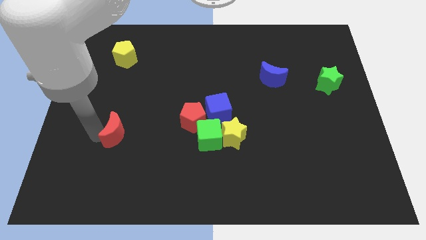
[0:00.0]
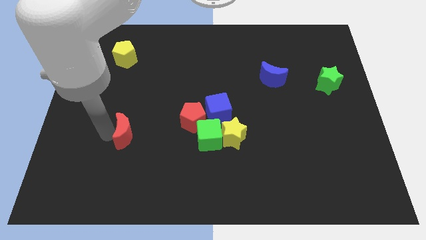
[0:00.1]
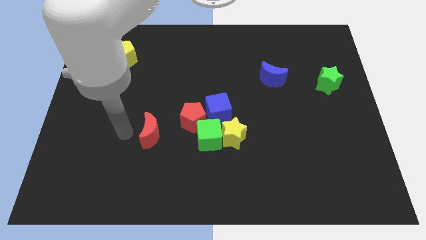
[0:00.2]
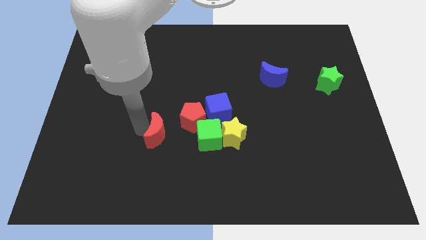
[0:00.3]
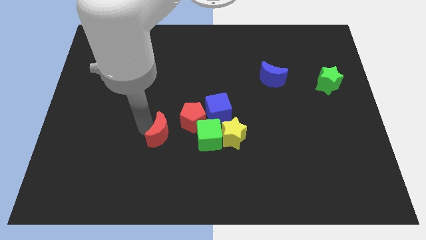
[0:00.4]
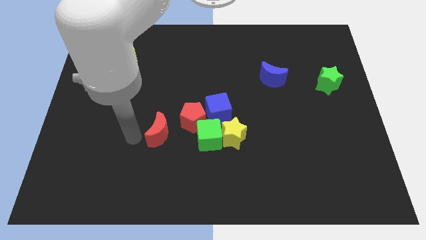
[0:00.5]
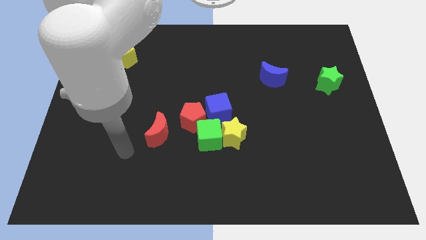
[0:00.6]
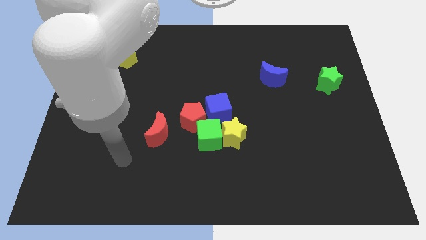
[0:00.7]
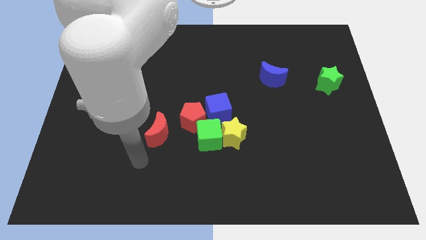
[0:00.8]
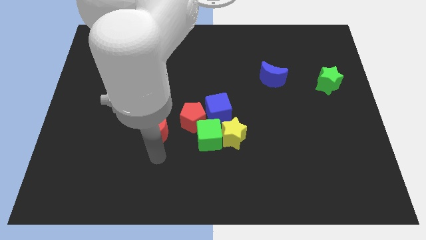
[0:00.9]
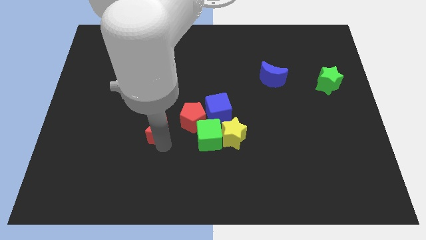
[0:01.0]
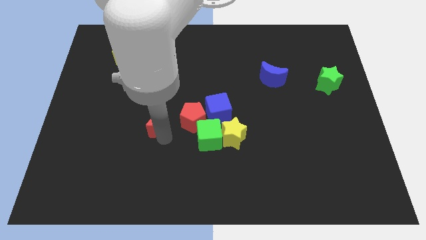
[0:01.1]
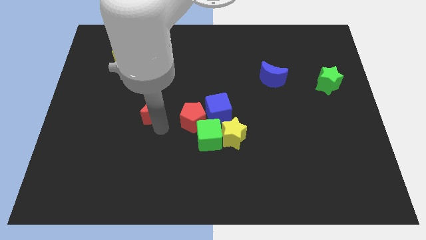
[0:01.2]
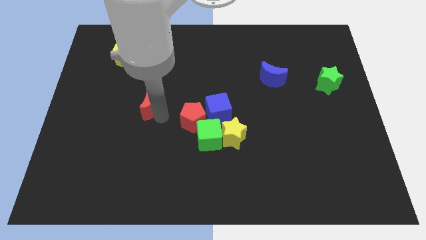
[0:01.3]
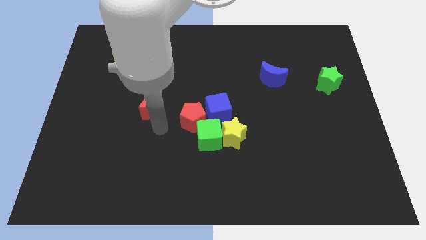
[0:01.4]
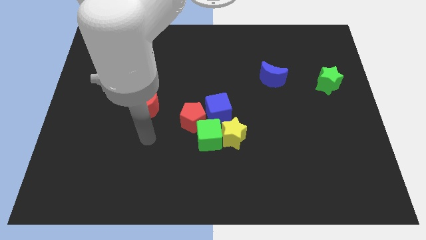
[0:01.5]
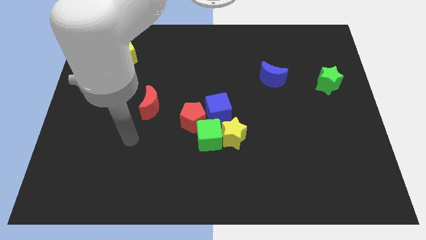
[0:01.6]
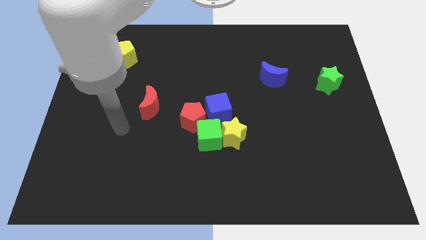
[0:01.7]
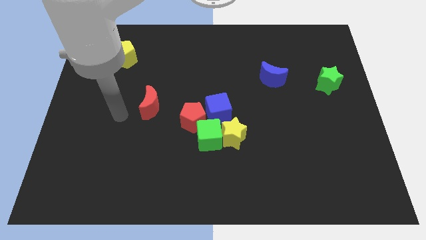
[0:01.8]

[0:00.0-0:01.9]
push the red crescent towards the center of the board

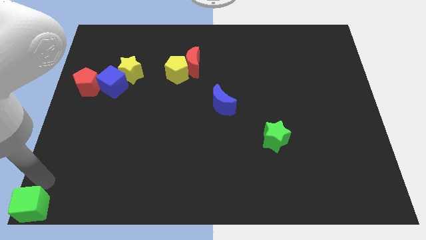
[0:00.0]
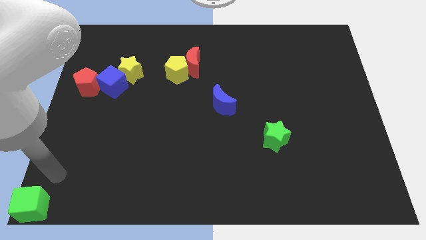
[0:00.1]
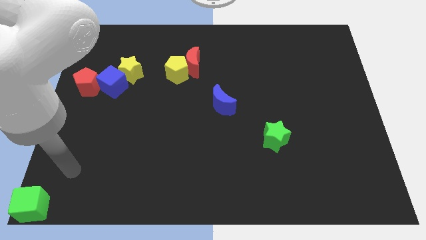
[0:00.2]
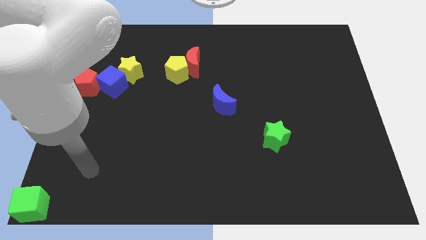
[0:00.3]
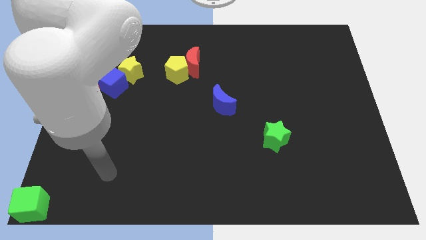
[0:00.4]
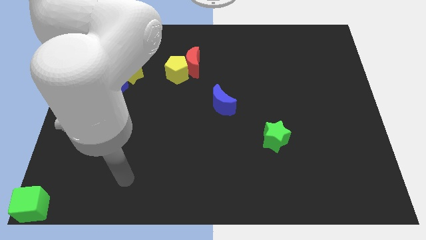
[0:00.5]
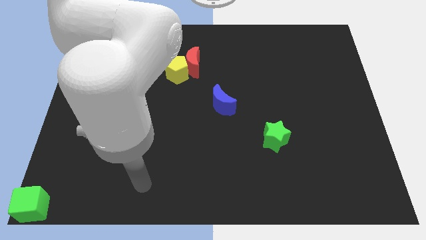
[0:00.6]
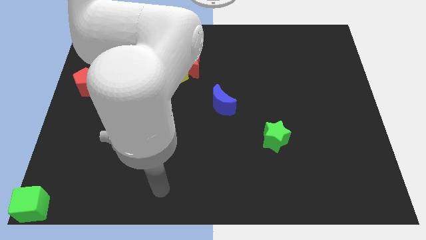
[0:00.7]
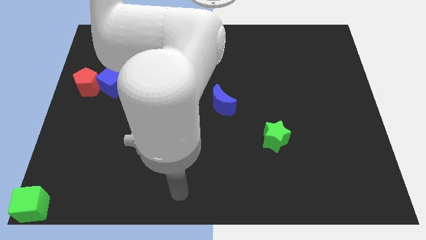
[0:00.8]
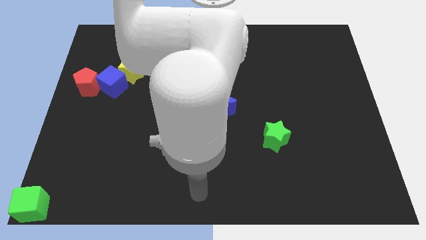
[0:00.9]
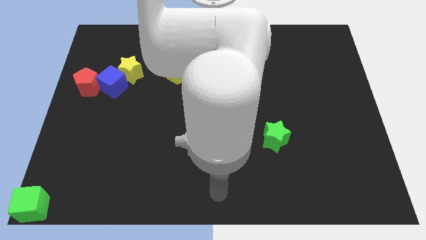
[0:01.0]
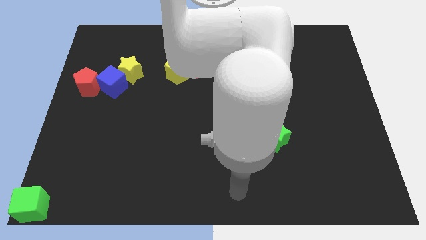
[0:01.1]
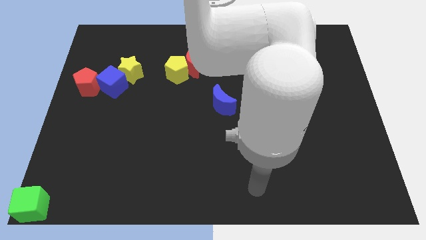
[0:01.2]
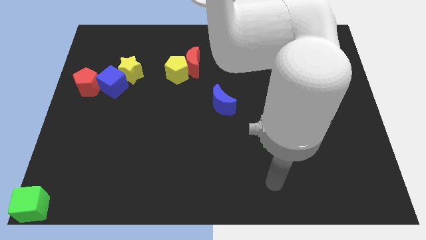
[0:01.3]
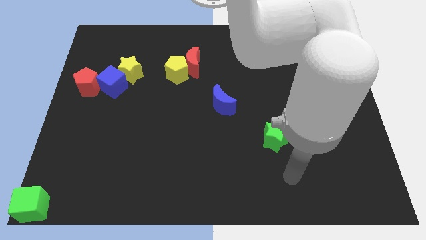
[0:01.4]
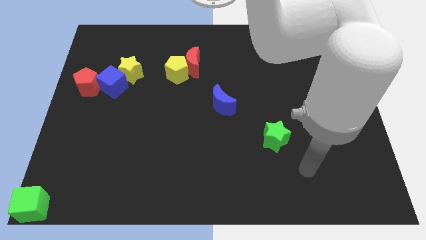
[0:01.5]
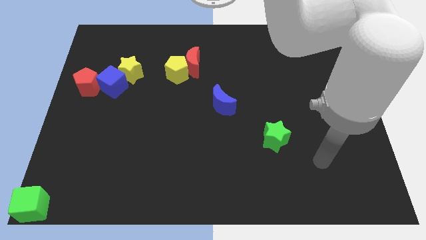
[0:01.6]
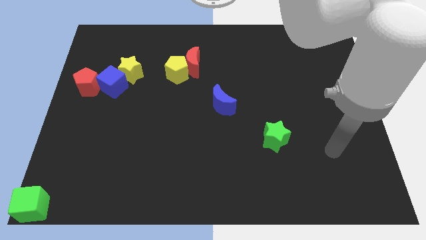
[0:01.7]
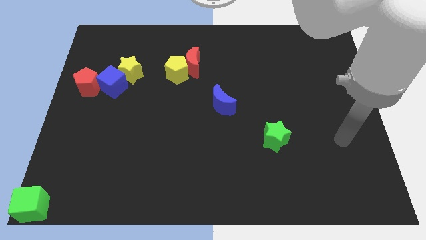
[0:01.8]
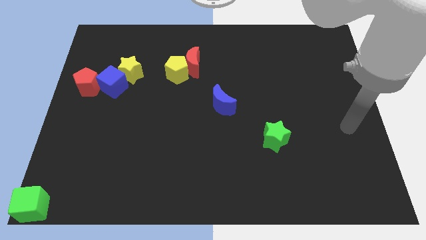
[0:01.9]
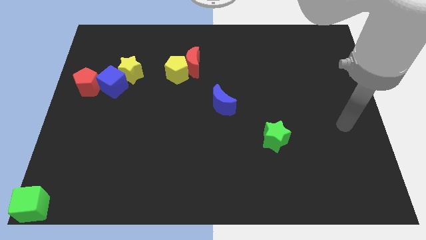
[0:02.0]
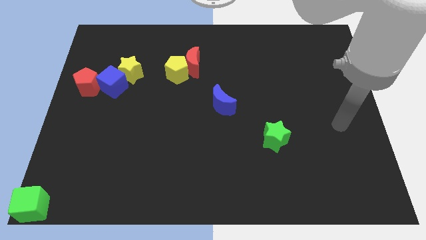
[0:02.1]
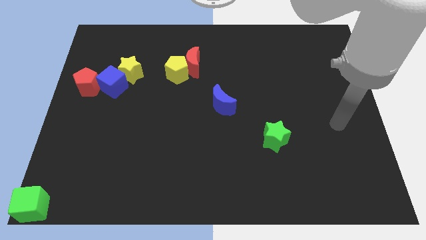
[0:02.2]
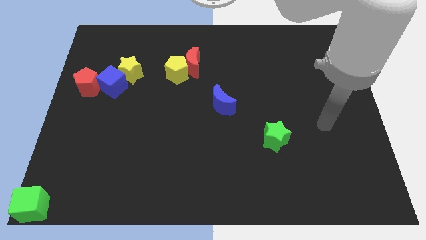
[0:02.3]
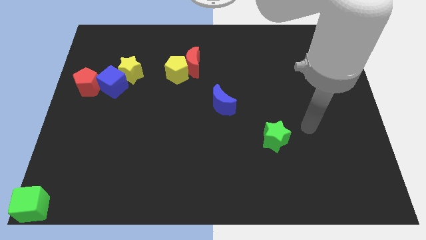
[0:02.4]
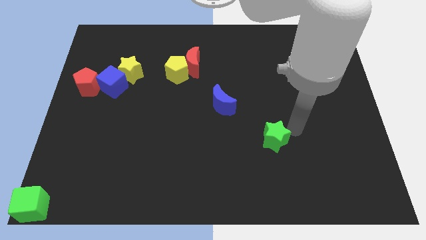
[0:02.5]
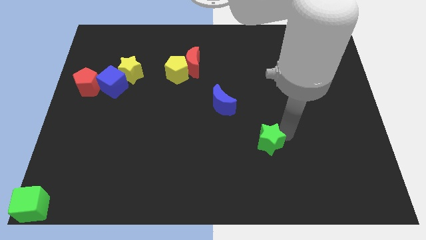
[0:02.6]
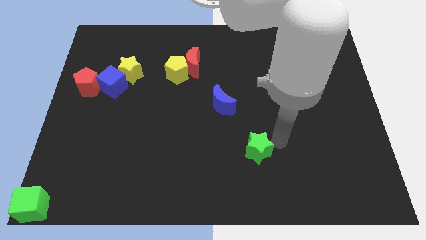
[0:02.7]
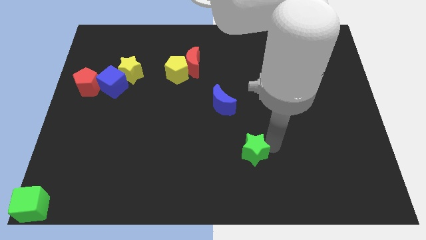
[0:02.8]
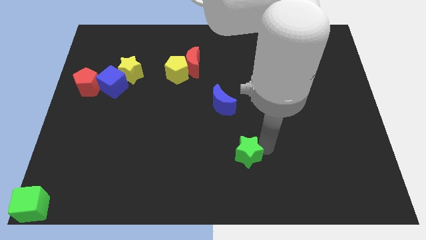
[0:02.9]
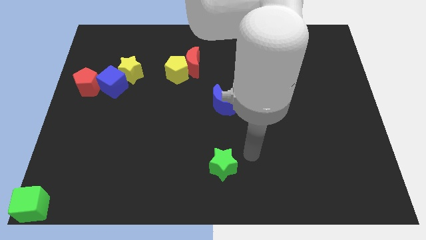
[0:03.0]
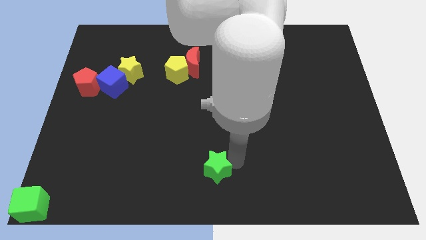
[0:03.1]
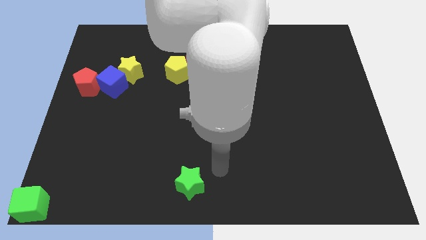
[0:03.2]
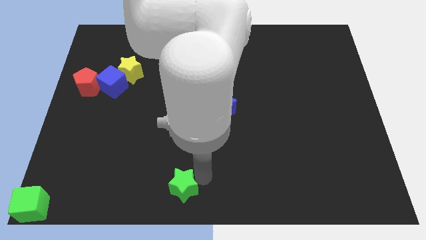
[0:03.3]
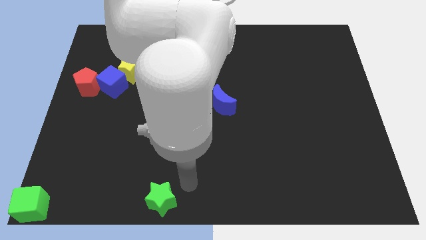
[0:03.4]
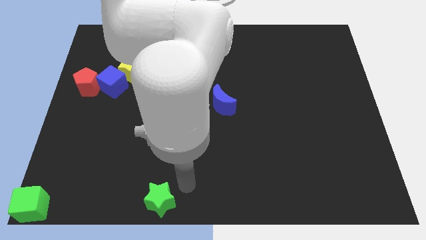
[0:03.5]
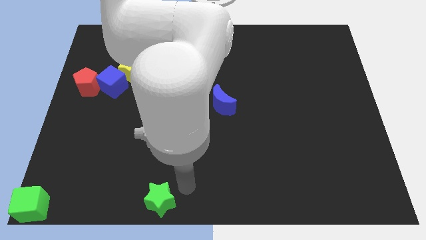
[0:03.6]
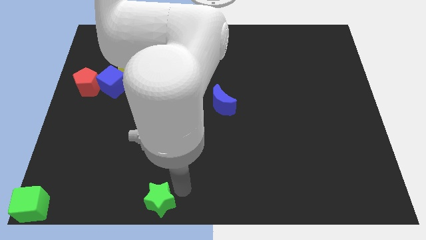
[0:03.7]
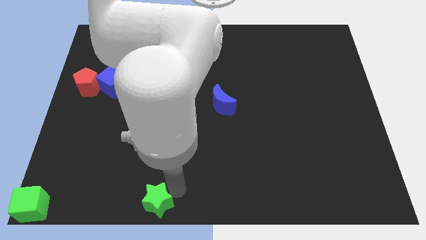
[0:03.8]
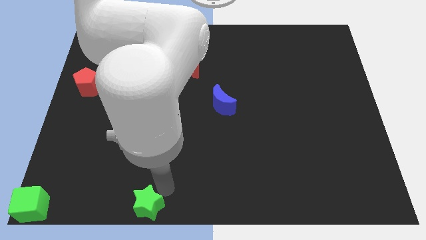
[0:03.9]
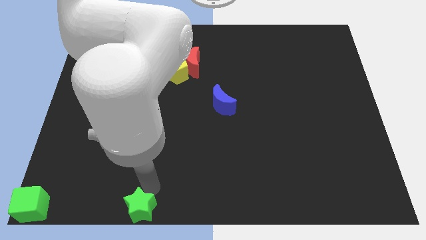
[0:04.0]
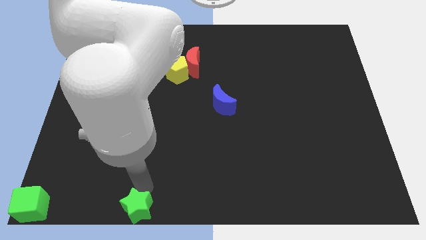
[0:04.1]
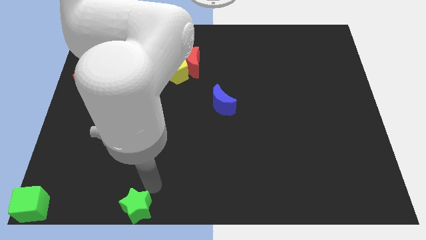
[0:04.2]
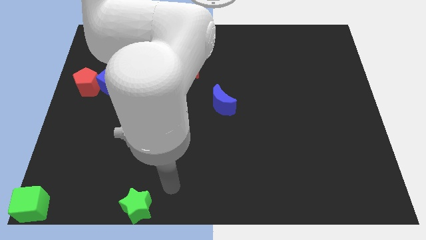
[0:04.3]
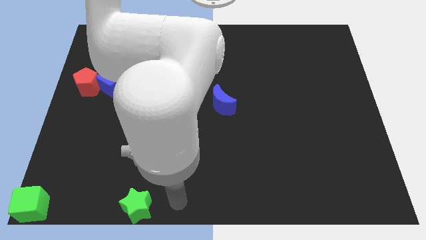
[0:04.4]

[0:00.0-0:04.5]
push the green star horizontally at the right side of the green cube

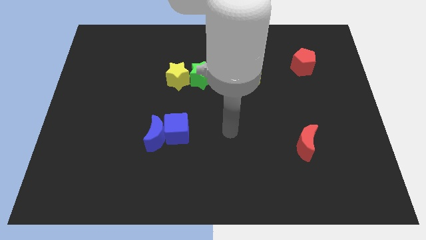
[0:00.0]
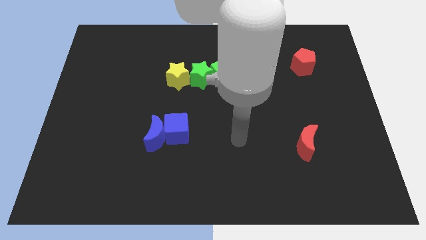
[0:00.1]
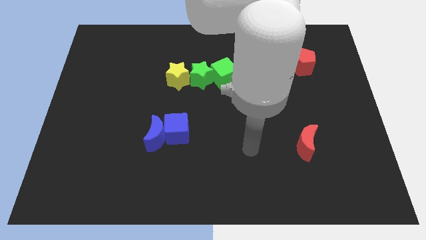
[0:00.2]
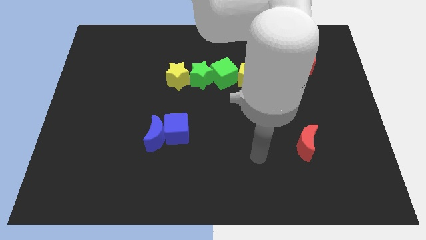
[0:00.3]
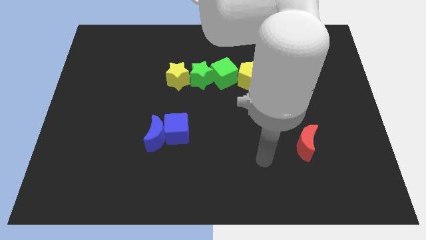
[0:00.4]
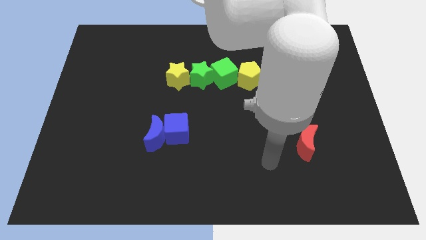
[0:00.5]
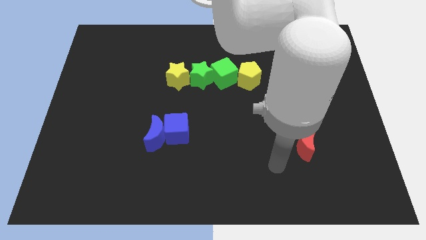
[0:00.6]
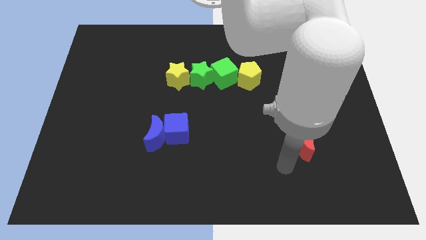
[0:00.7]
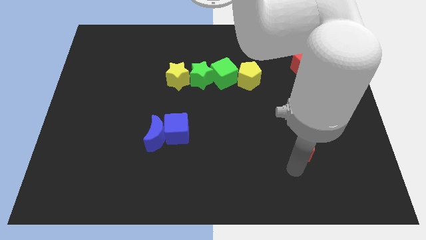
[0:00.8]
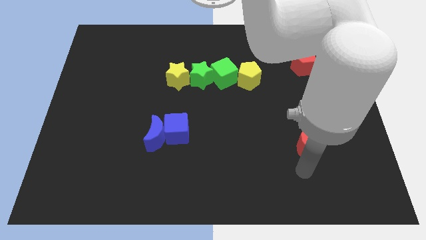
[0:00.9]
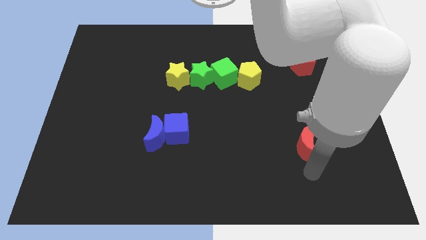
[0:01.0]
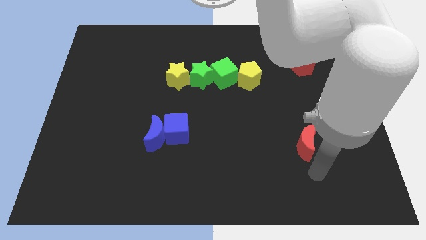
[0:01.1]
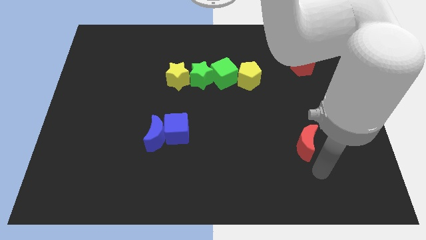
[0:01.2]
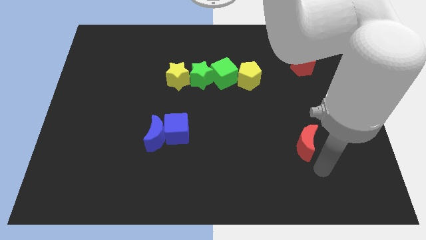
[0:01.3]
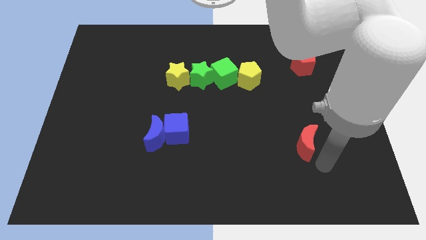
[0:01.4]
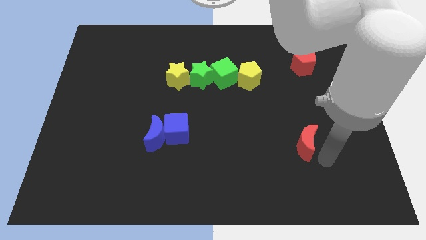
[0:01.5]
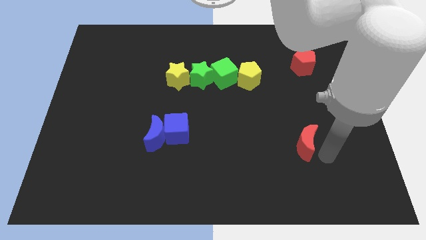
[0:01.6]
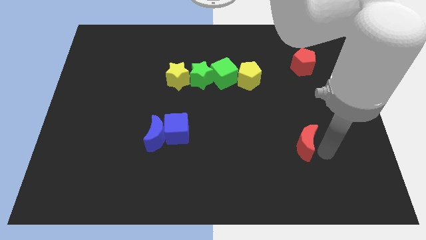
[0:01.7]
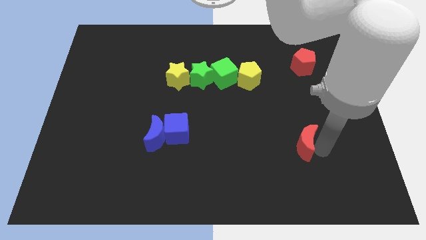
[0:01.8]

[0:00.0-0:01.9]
move your arm to the right of the red crescent

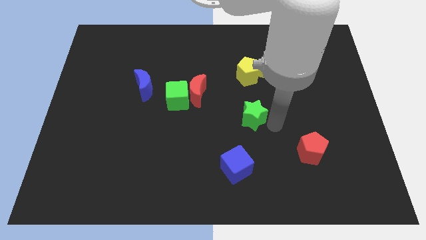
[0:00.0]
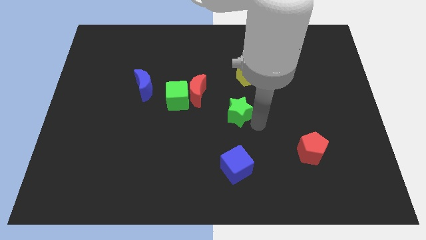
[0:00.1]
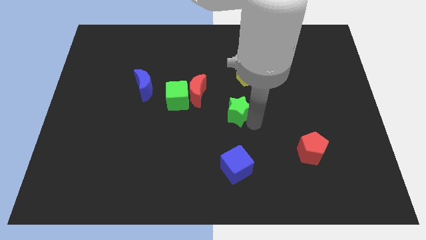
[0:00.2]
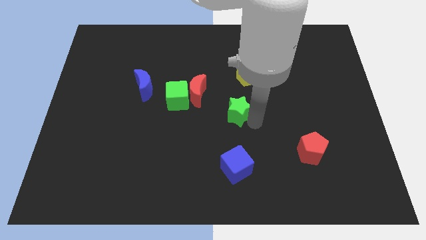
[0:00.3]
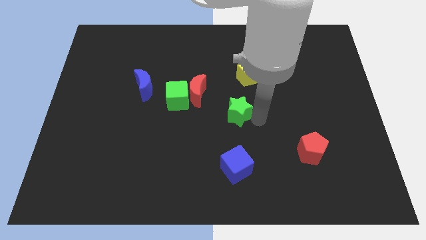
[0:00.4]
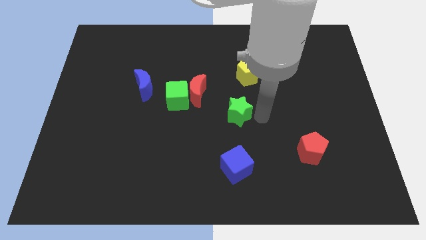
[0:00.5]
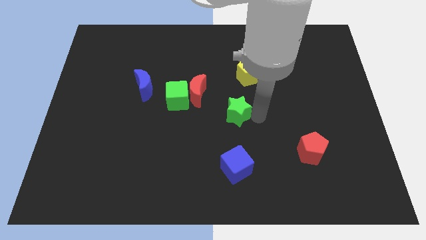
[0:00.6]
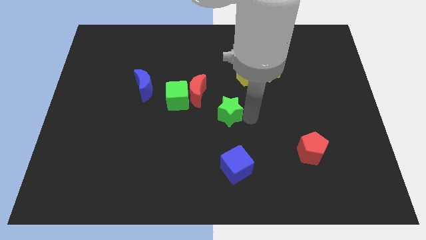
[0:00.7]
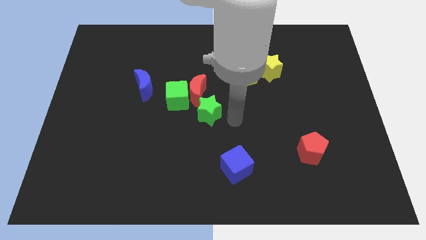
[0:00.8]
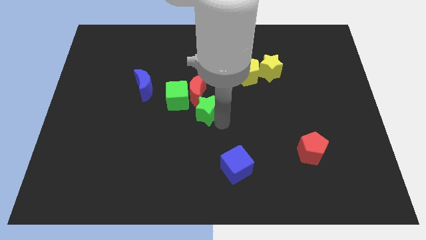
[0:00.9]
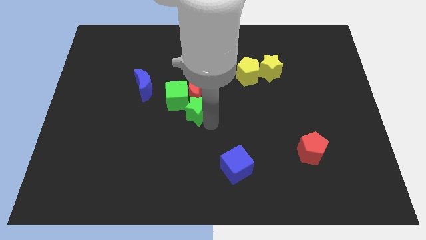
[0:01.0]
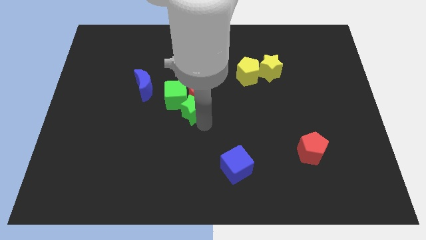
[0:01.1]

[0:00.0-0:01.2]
make a group of green blocks and red moon
